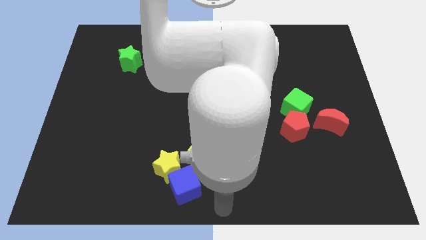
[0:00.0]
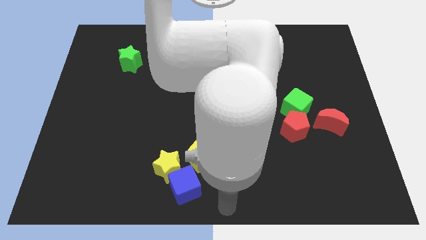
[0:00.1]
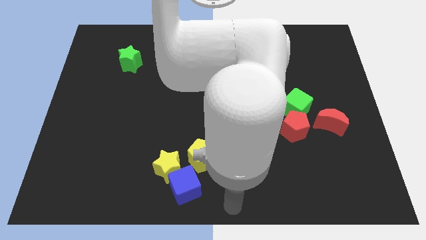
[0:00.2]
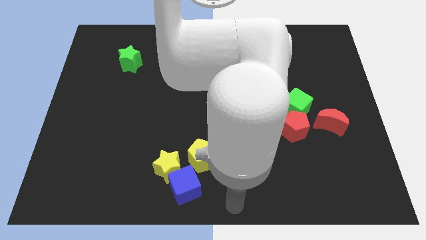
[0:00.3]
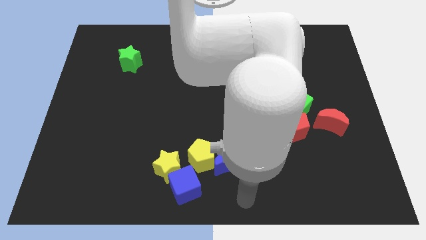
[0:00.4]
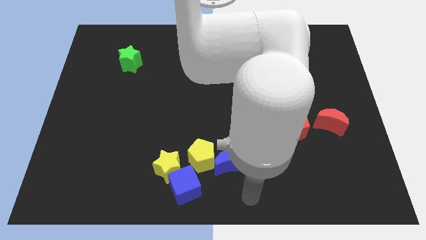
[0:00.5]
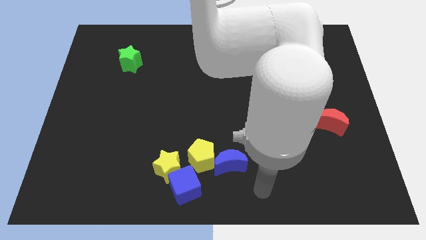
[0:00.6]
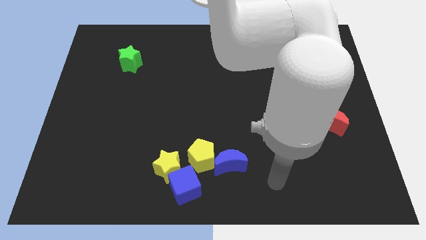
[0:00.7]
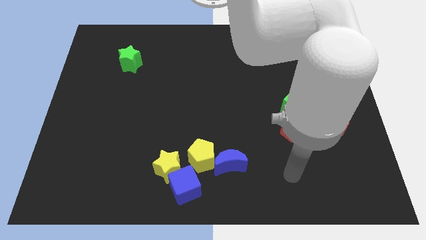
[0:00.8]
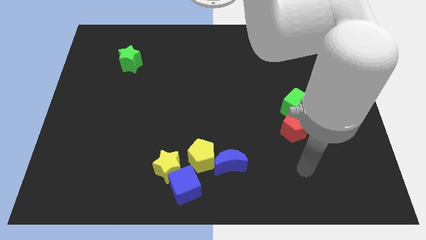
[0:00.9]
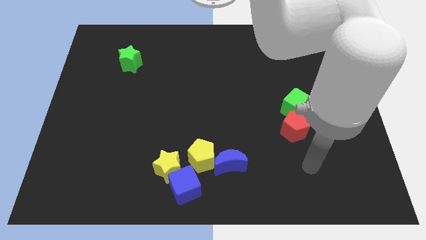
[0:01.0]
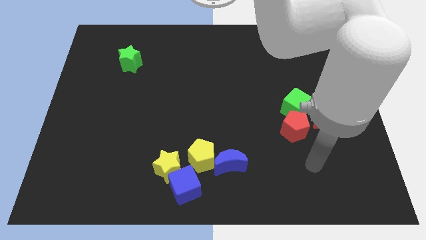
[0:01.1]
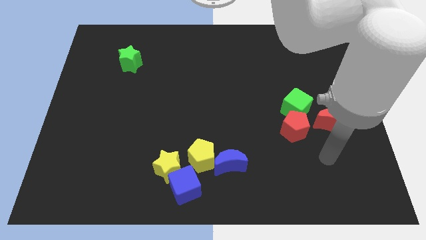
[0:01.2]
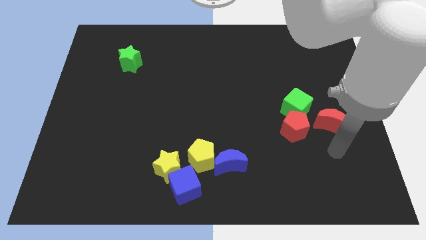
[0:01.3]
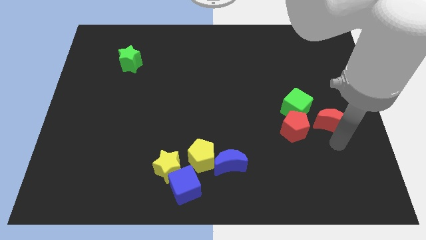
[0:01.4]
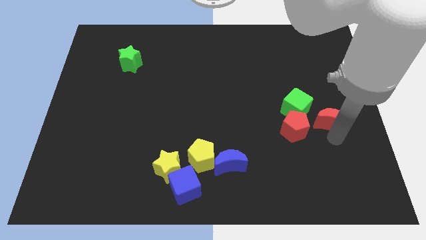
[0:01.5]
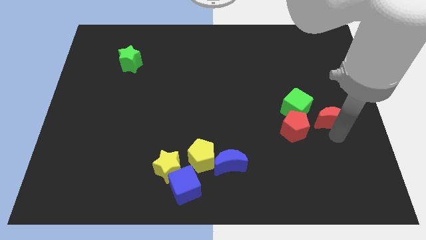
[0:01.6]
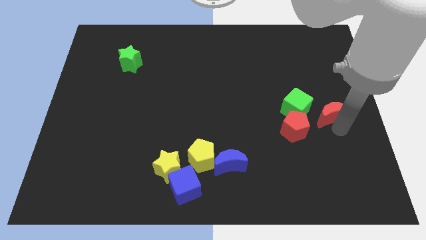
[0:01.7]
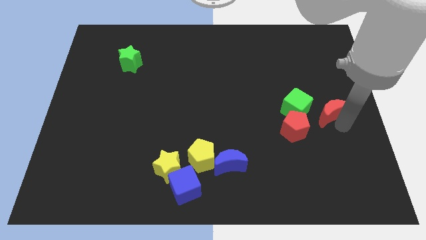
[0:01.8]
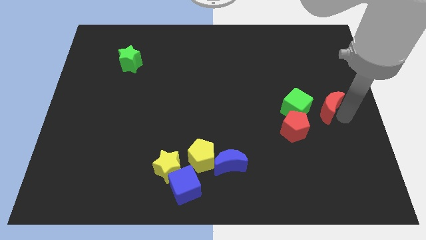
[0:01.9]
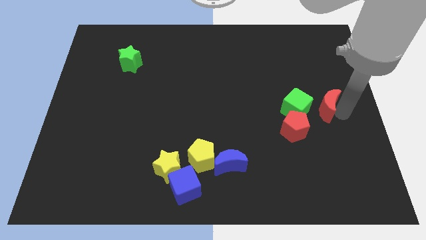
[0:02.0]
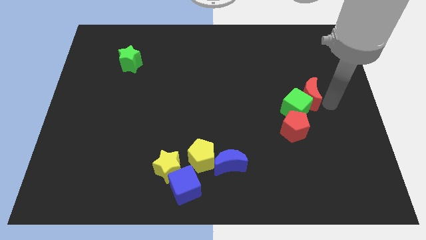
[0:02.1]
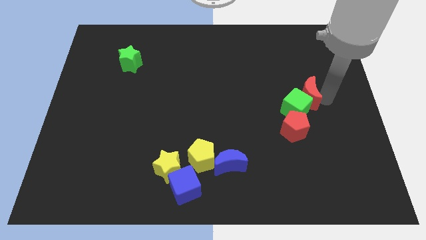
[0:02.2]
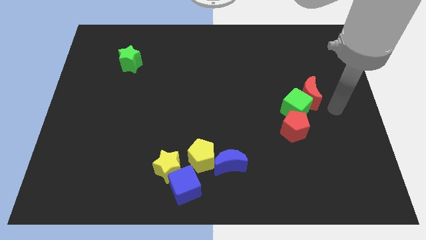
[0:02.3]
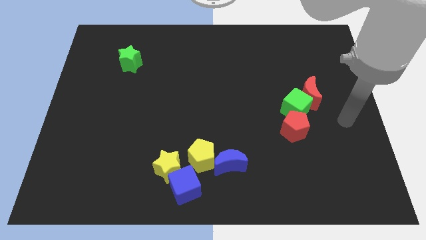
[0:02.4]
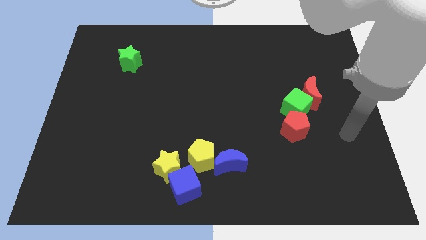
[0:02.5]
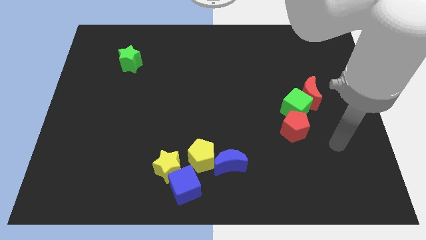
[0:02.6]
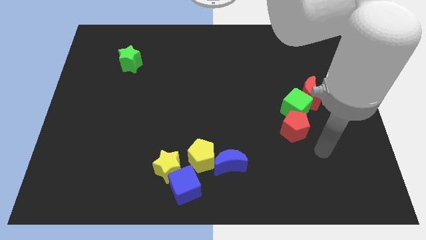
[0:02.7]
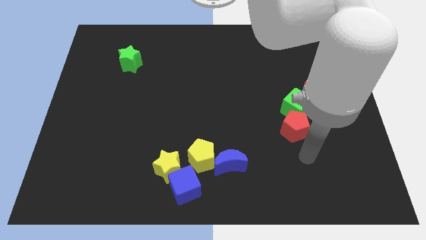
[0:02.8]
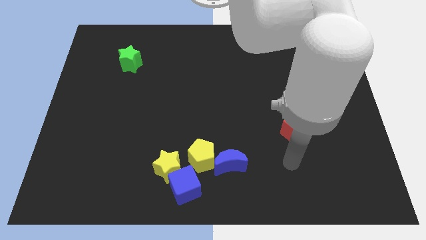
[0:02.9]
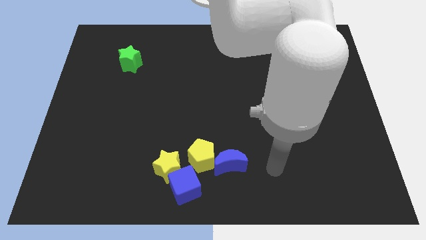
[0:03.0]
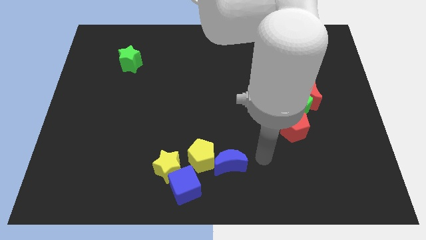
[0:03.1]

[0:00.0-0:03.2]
place the red moon at the top of the green cube

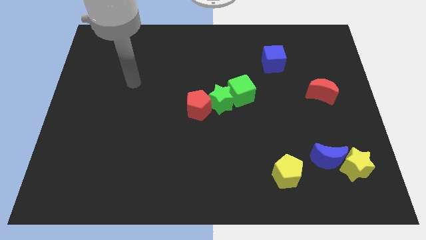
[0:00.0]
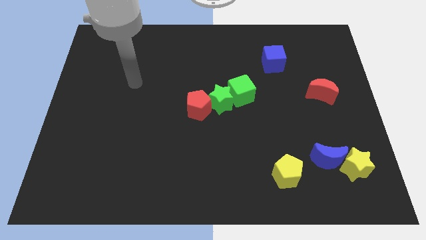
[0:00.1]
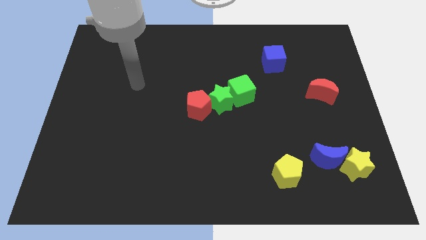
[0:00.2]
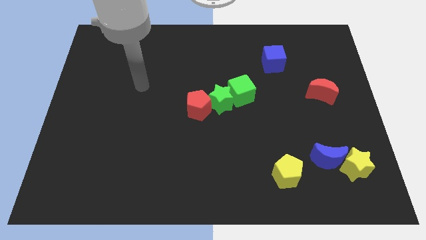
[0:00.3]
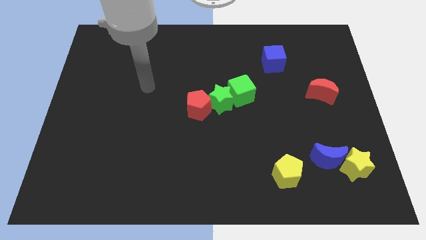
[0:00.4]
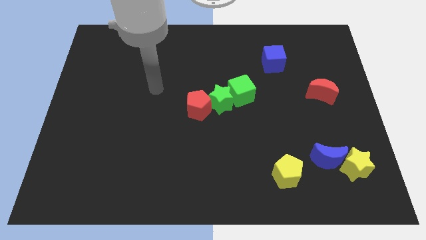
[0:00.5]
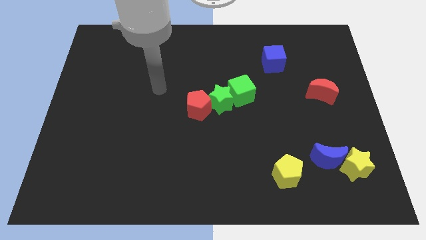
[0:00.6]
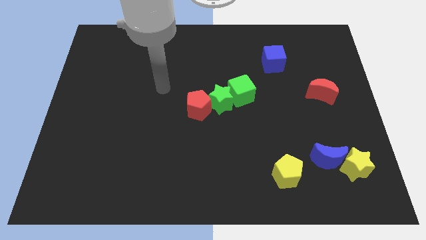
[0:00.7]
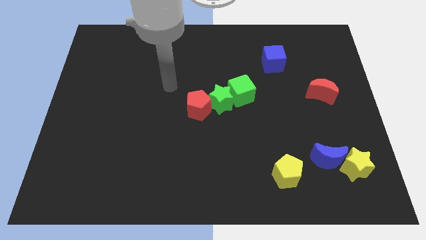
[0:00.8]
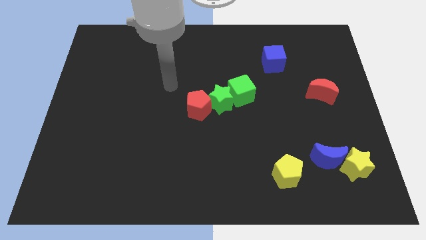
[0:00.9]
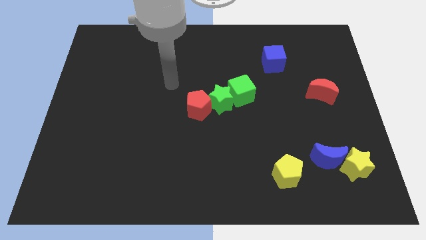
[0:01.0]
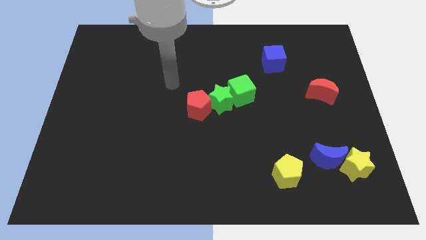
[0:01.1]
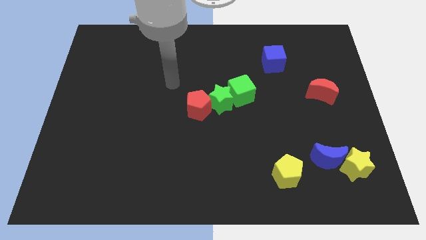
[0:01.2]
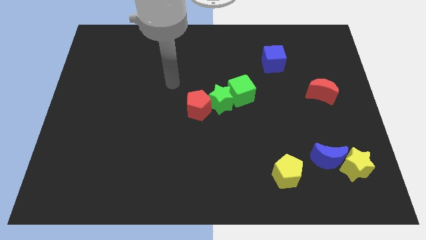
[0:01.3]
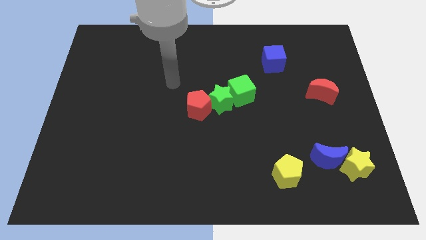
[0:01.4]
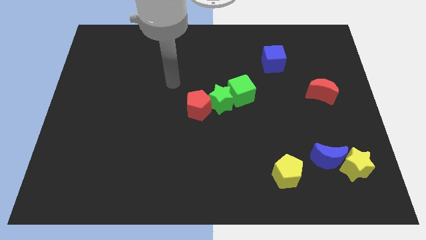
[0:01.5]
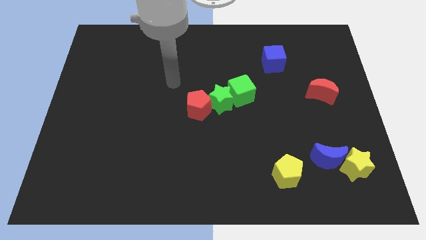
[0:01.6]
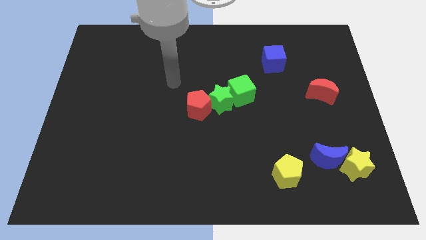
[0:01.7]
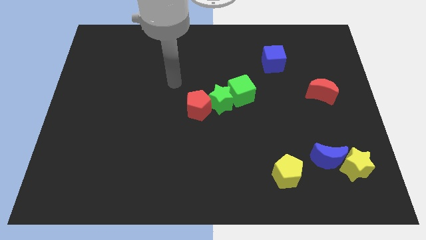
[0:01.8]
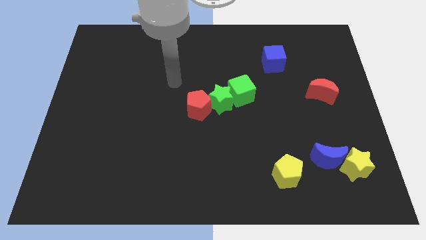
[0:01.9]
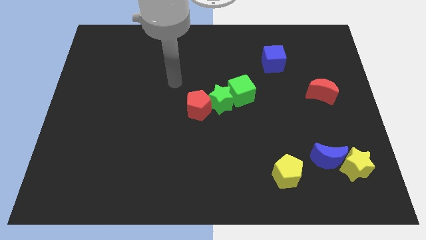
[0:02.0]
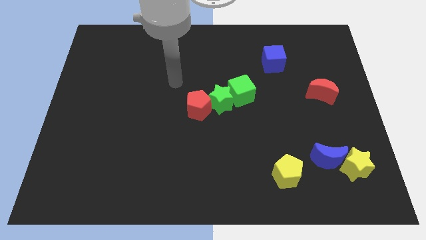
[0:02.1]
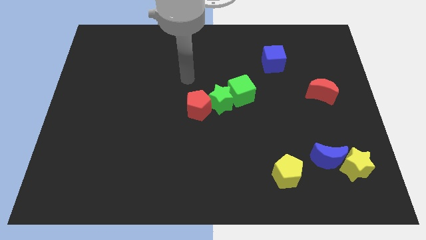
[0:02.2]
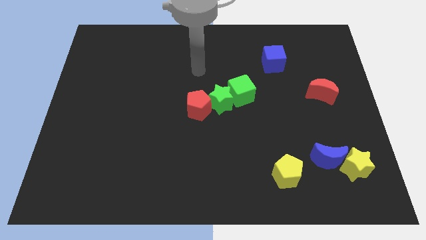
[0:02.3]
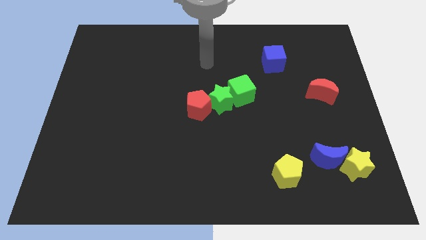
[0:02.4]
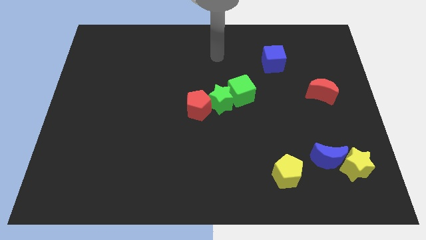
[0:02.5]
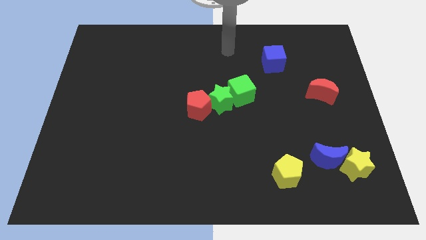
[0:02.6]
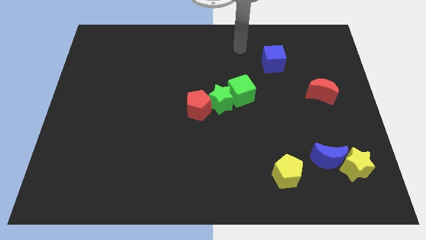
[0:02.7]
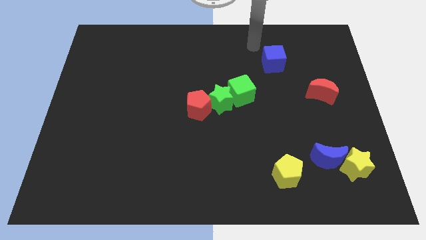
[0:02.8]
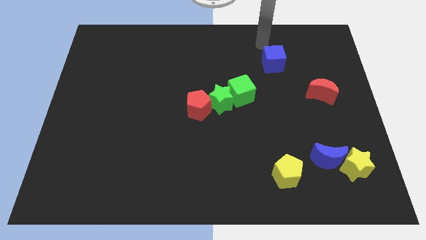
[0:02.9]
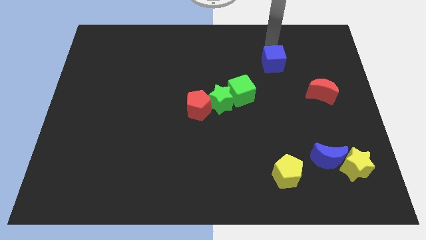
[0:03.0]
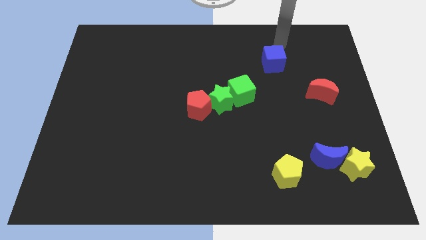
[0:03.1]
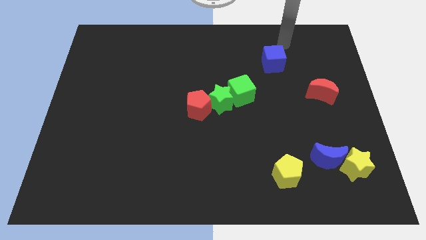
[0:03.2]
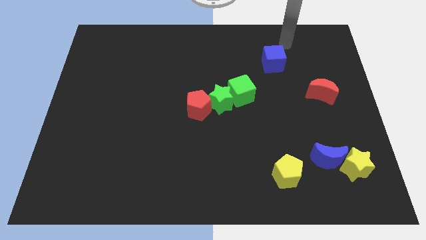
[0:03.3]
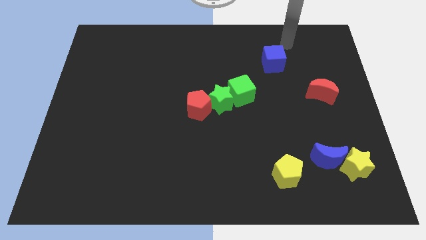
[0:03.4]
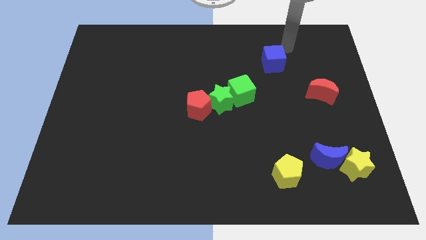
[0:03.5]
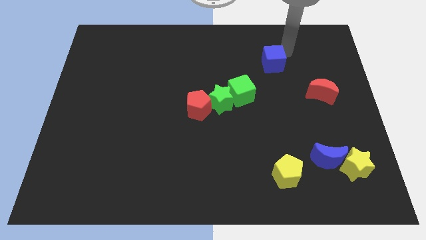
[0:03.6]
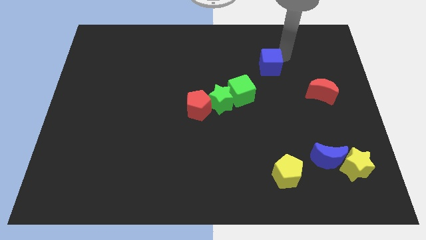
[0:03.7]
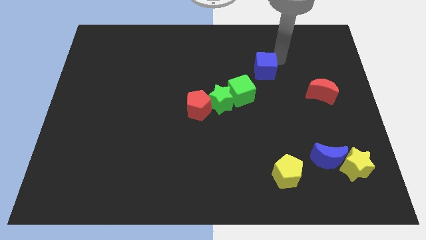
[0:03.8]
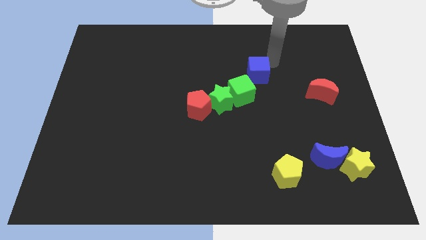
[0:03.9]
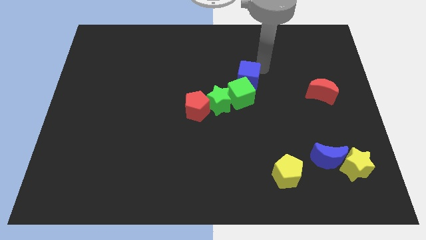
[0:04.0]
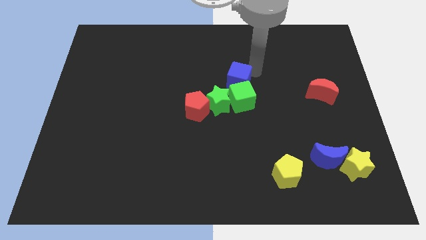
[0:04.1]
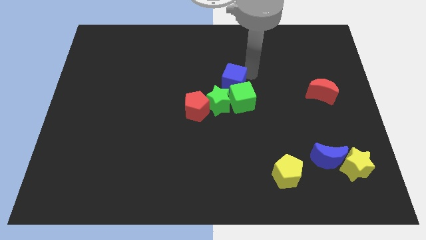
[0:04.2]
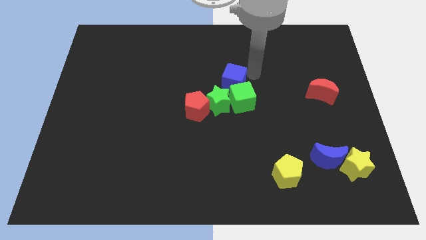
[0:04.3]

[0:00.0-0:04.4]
push the blue cube into the green cube

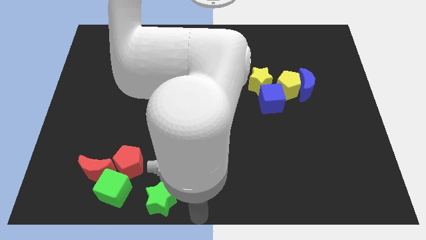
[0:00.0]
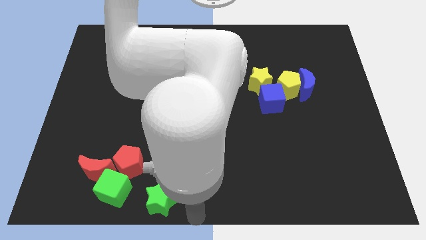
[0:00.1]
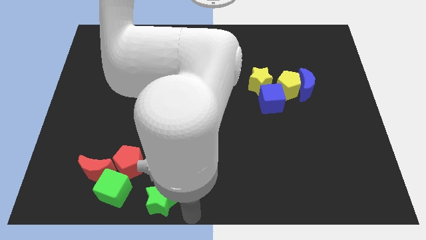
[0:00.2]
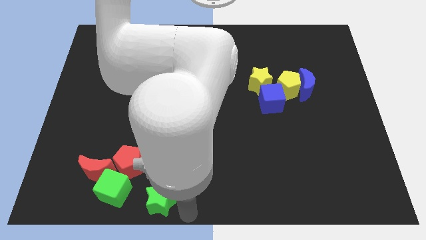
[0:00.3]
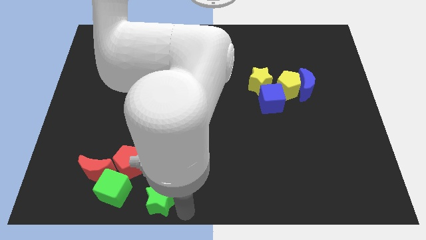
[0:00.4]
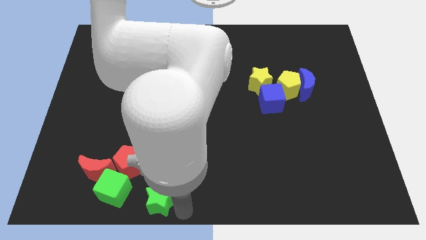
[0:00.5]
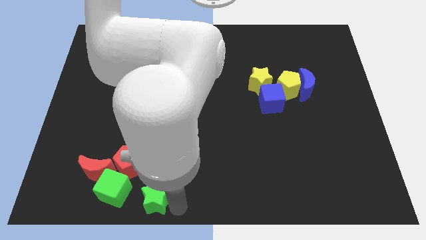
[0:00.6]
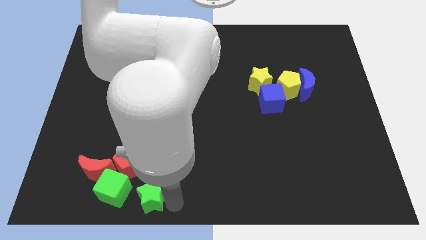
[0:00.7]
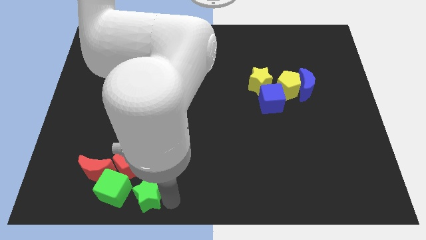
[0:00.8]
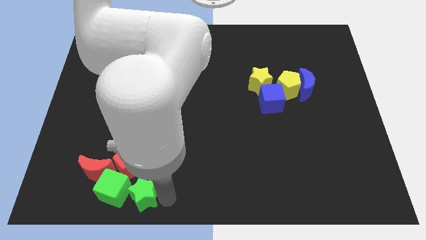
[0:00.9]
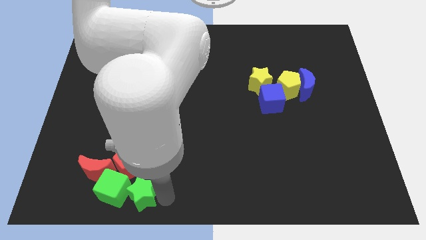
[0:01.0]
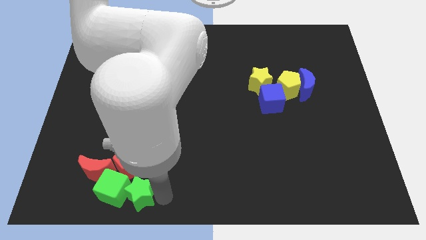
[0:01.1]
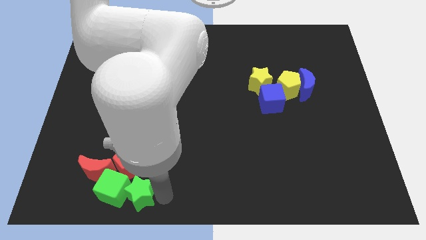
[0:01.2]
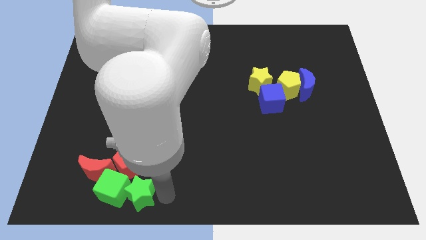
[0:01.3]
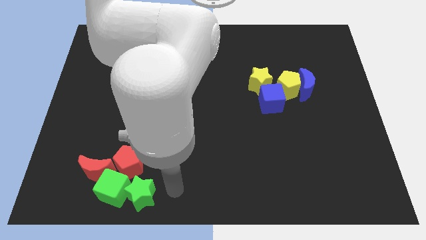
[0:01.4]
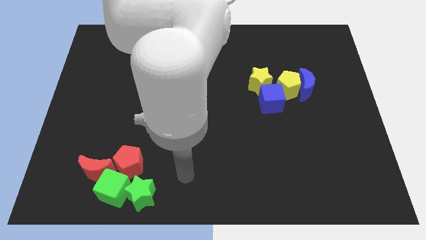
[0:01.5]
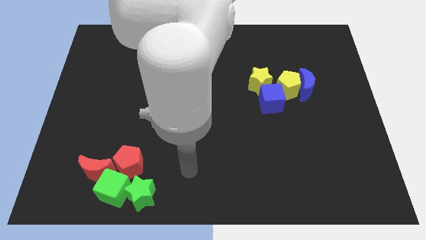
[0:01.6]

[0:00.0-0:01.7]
push the green star into green cube
